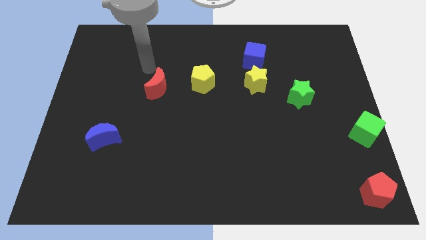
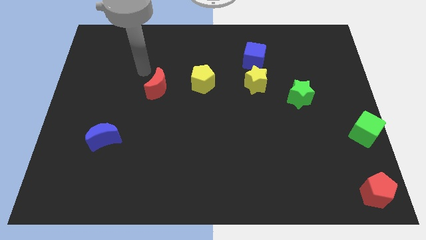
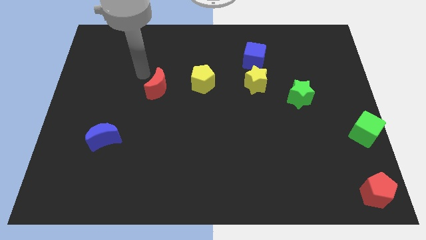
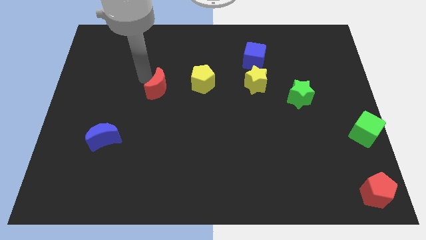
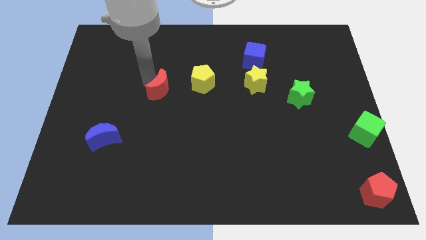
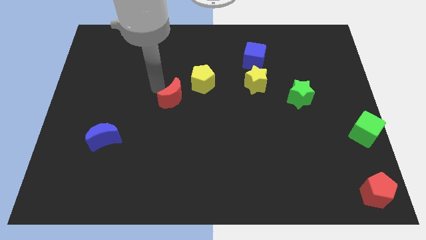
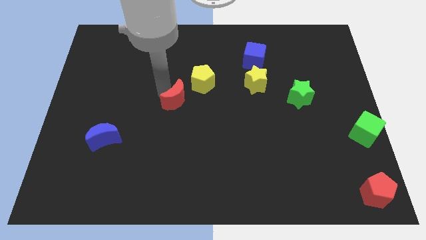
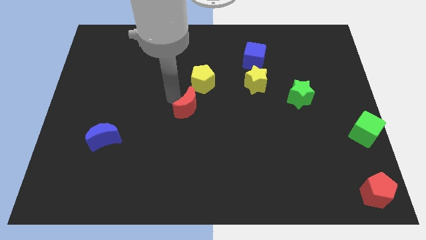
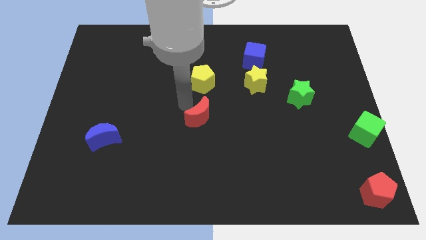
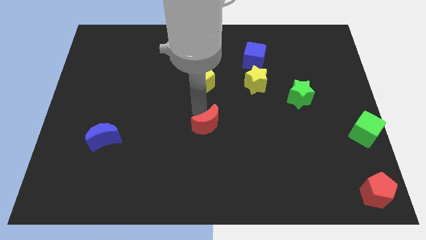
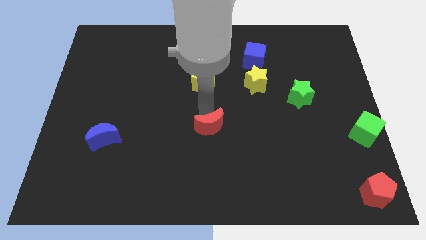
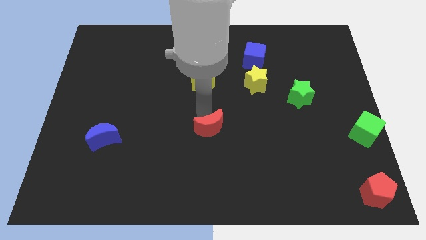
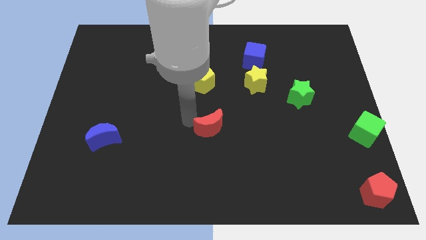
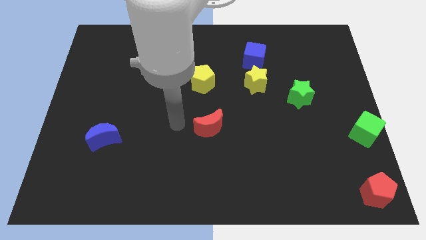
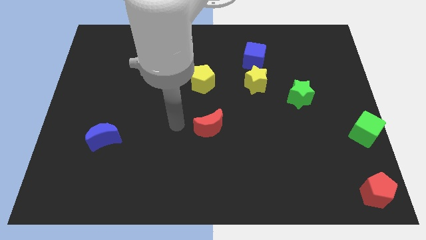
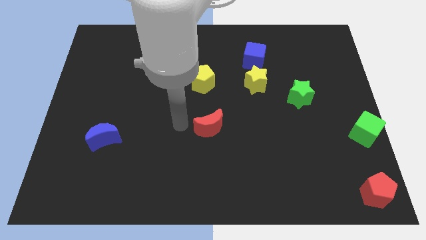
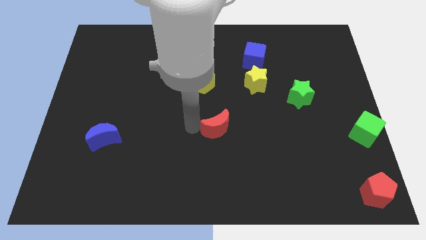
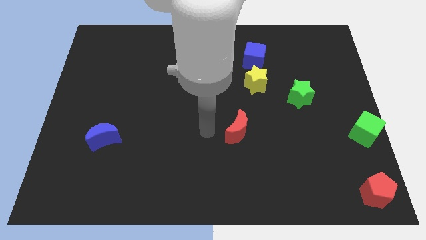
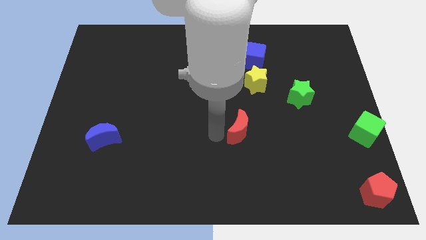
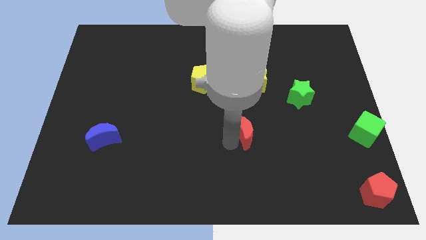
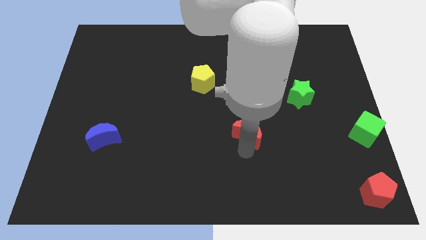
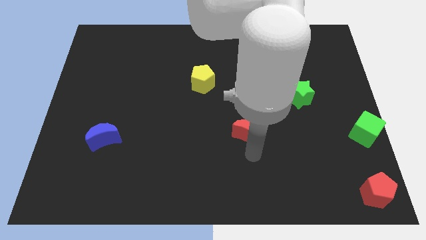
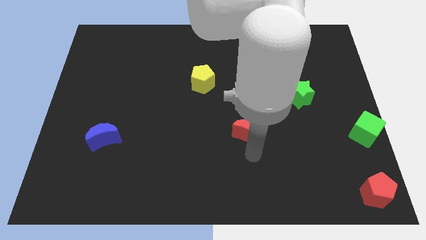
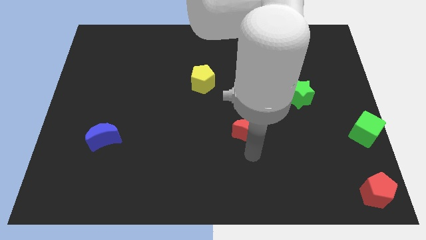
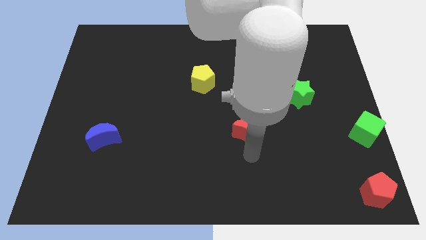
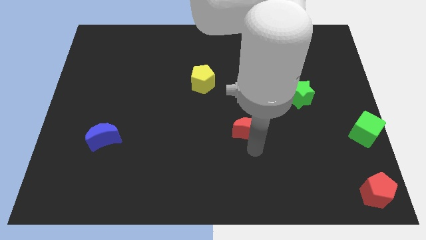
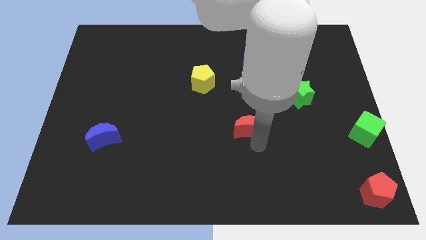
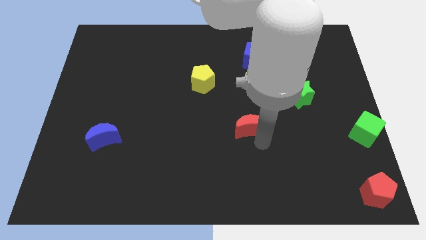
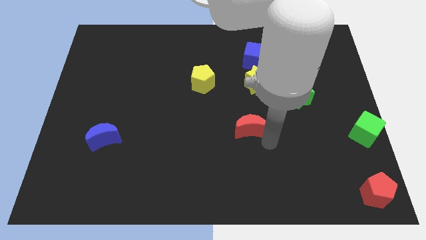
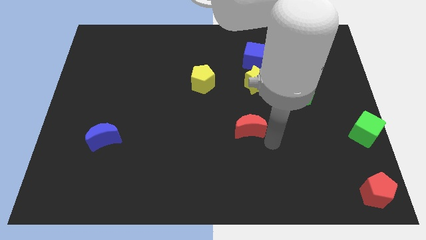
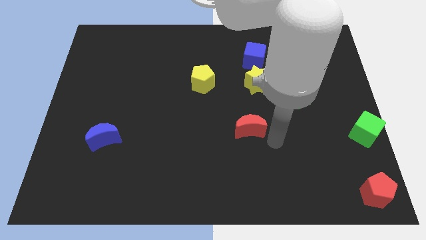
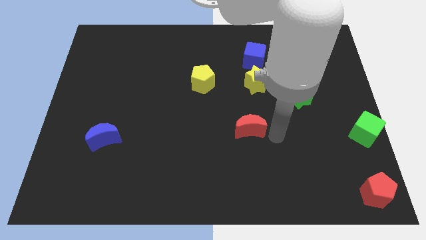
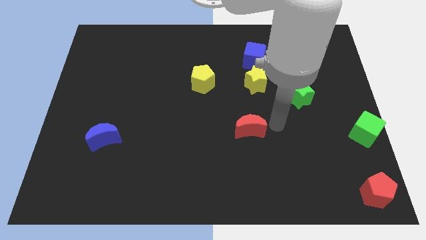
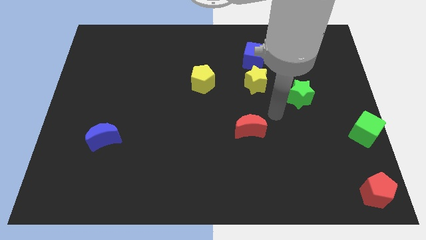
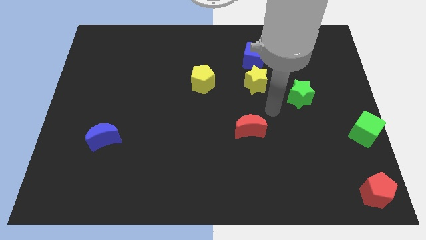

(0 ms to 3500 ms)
push the red crescent to the bottom of the yellow star

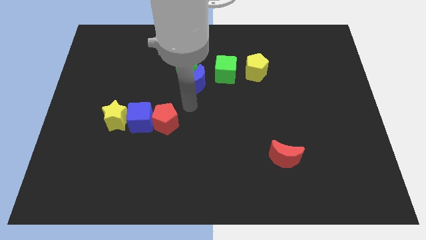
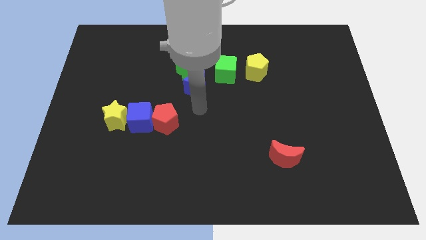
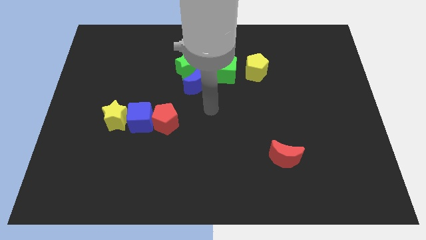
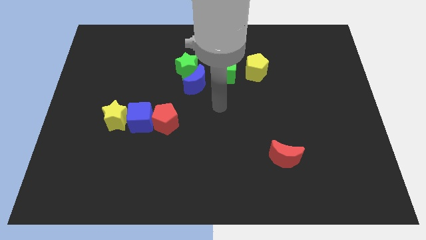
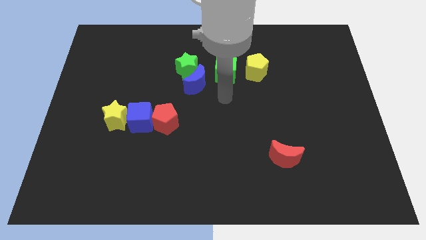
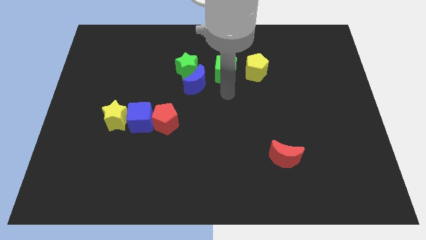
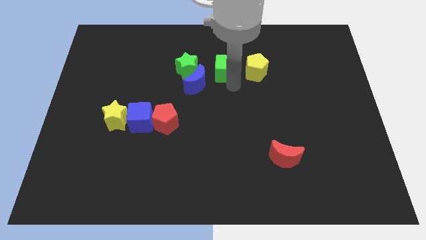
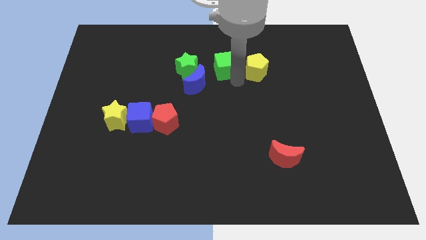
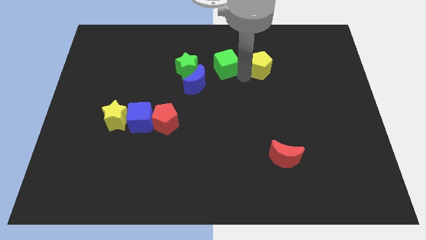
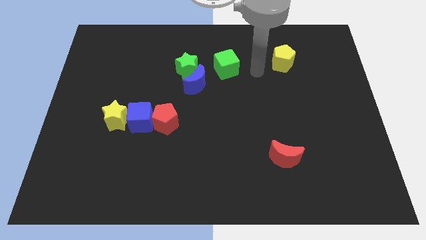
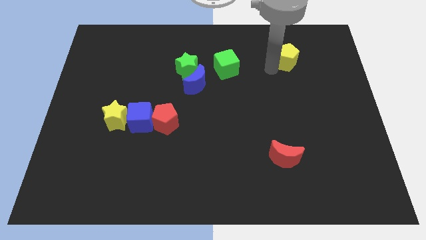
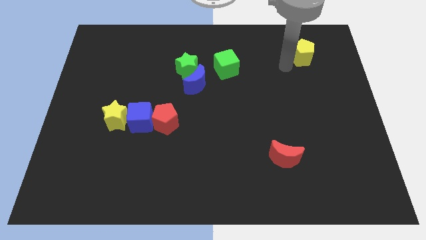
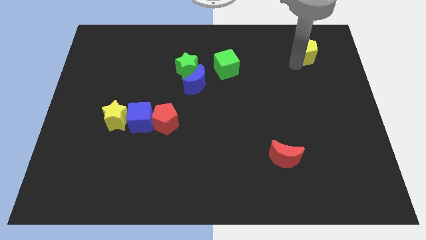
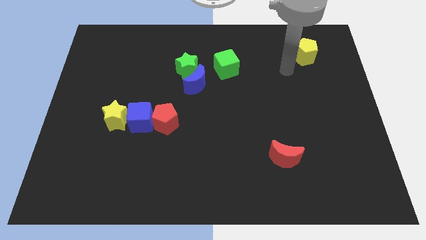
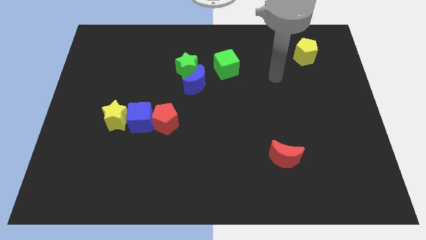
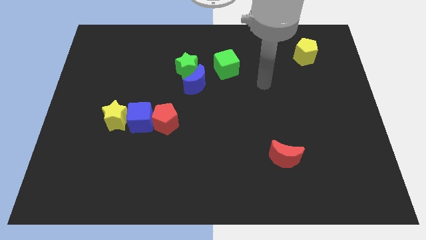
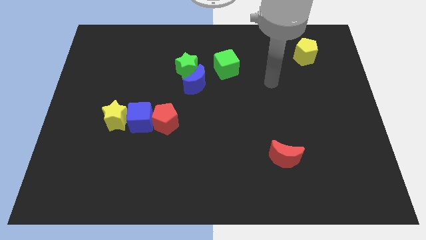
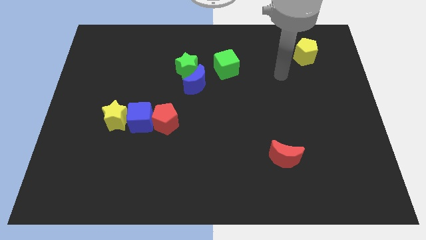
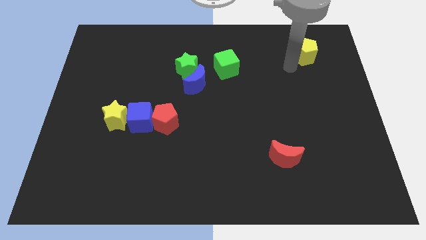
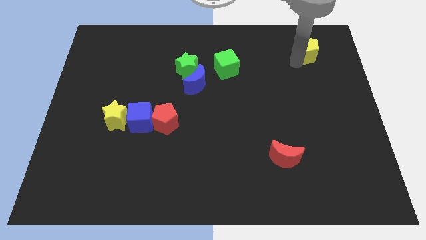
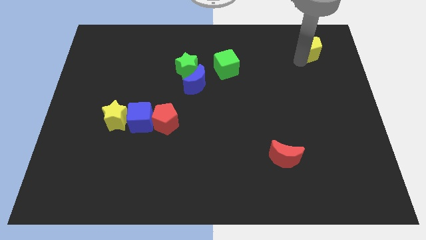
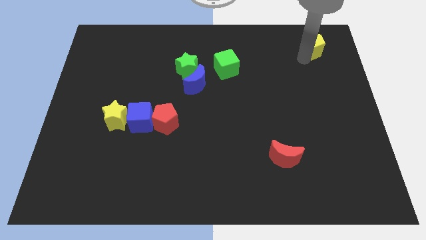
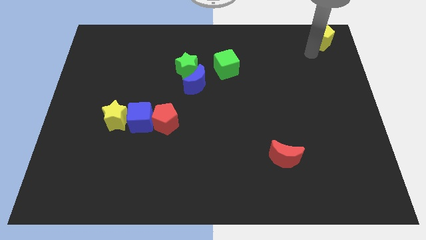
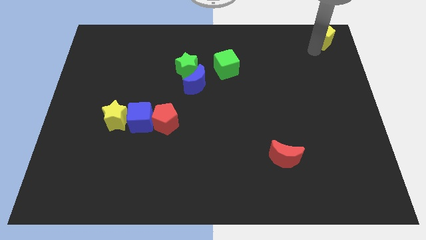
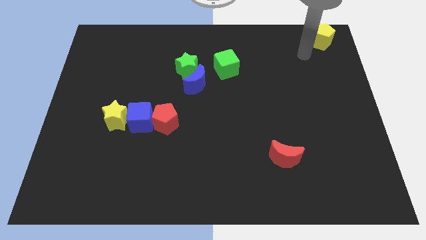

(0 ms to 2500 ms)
push yellow pentagon away from green block

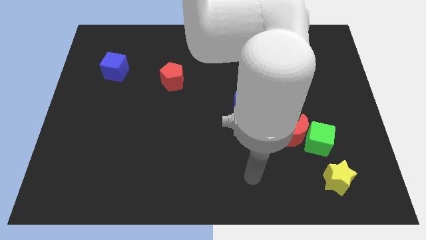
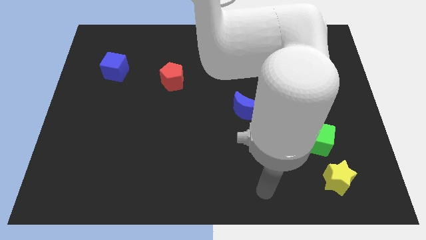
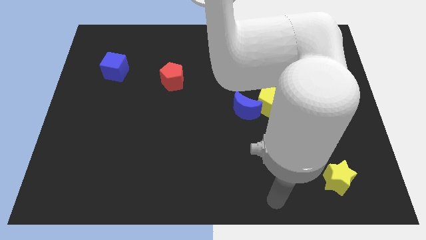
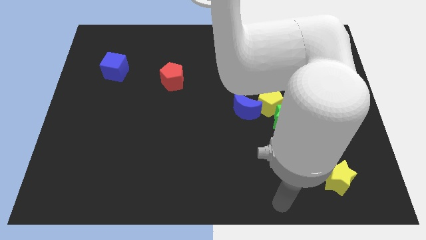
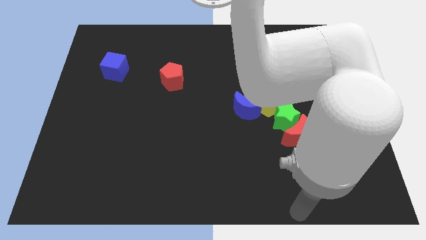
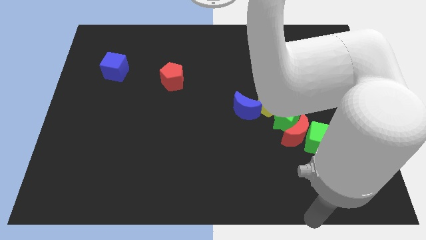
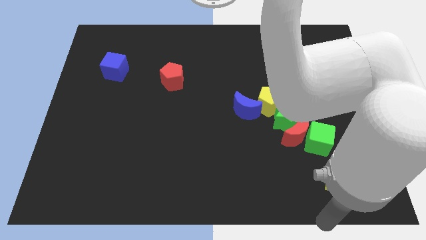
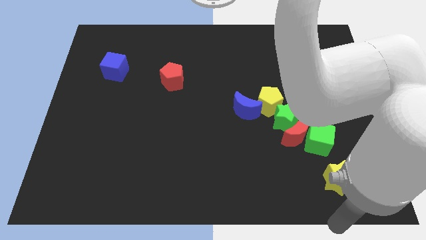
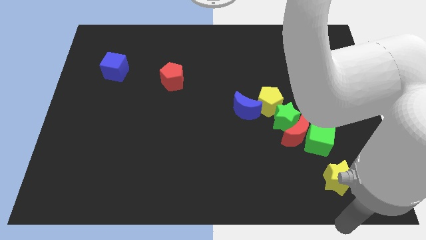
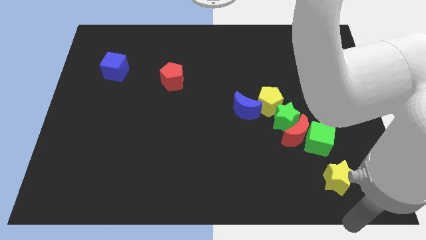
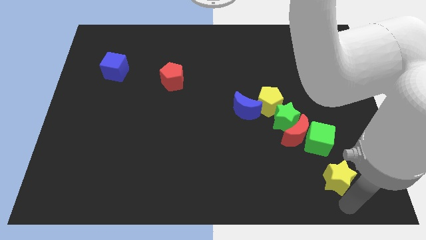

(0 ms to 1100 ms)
move your arm towards yellow star

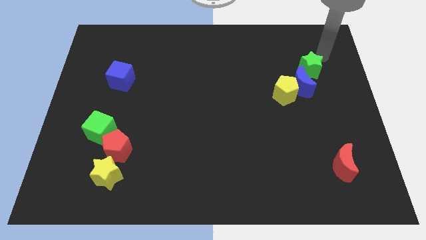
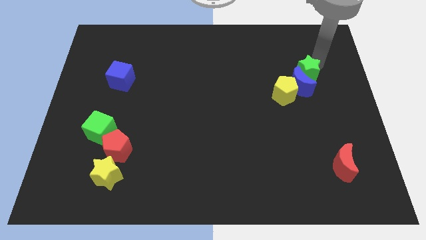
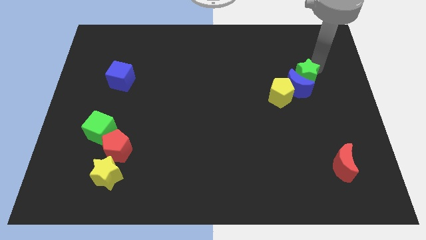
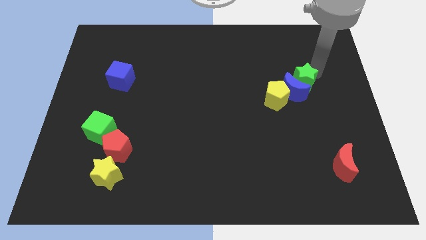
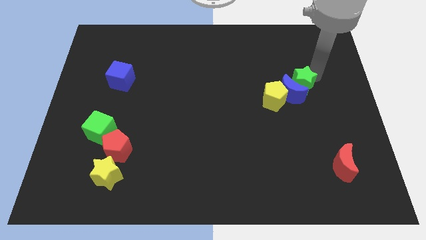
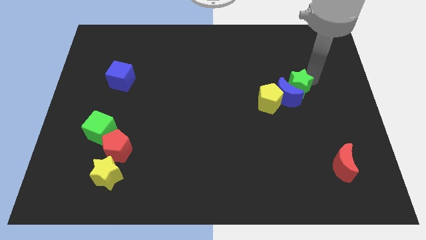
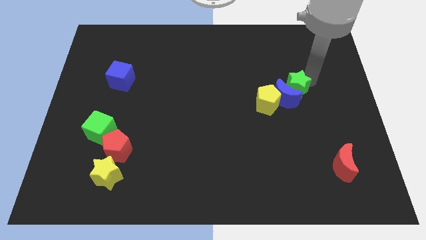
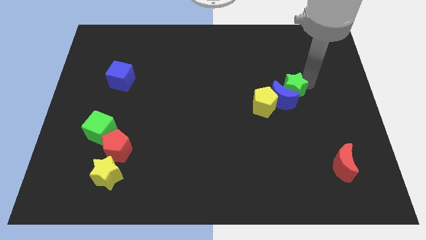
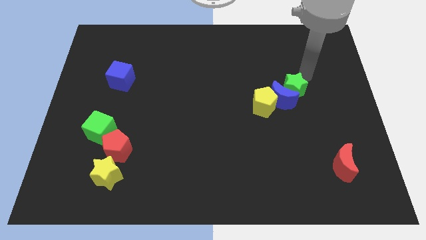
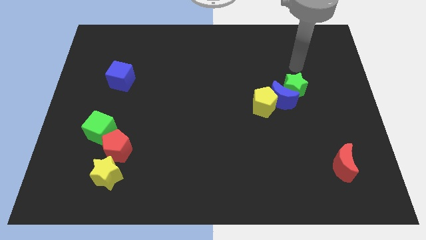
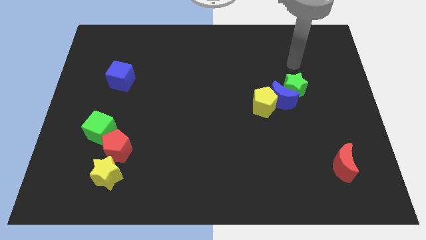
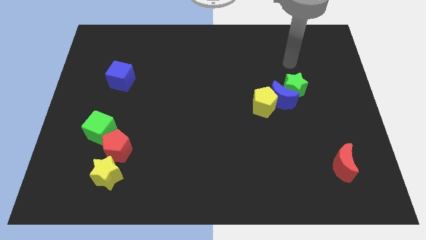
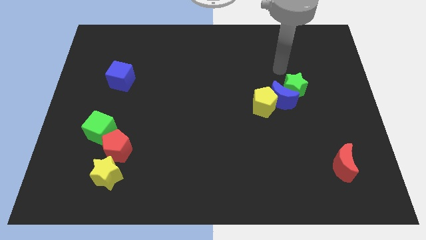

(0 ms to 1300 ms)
push the yellow pentagon blue moon and green star towards the center of the board

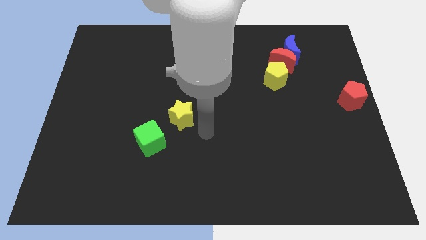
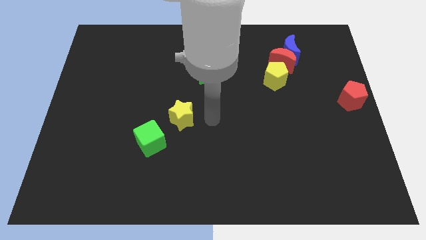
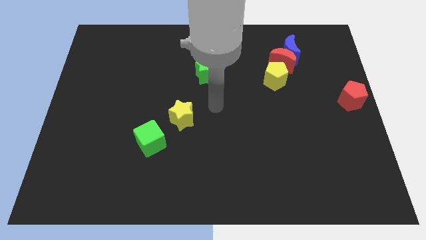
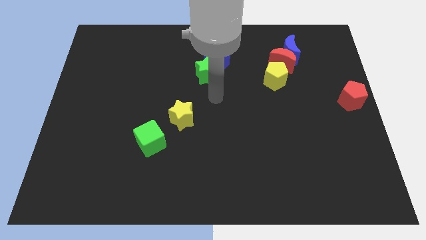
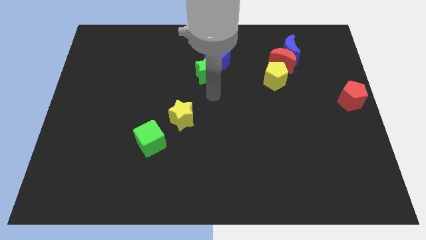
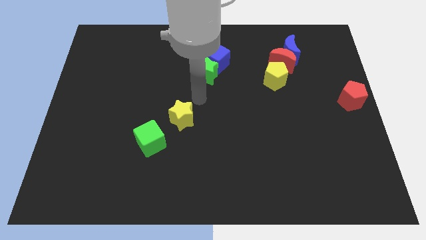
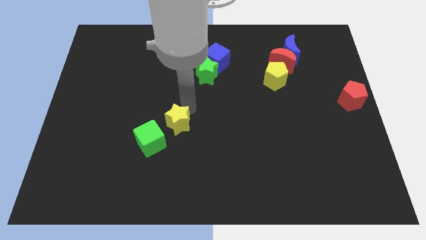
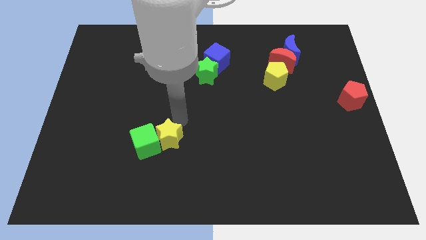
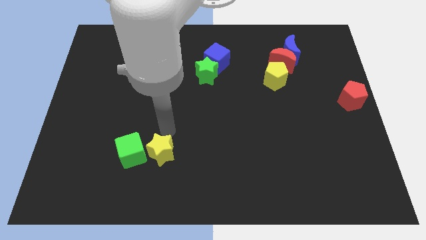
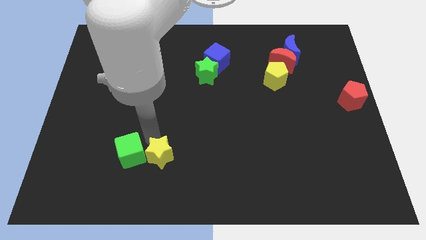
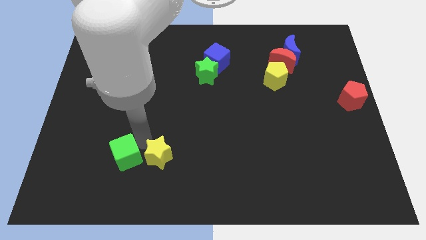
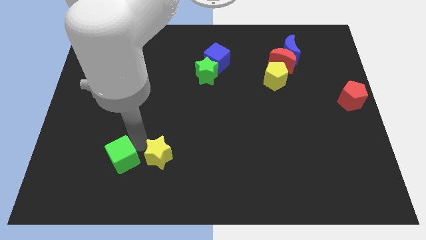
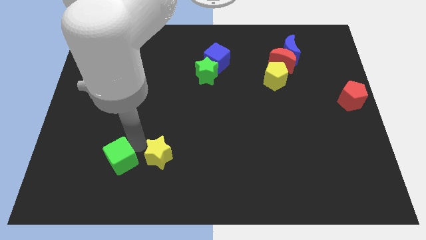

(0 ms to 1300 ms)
push green cube slightly with the yellow star
